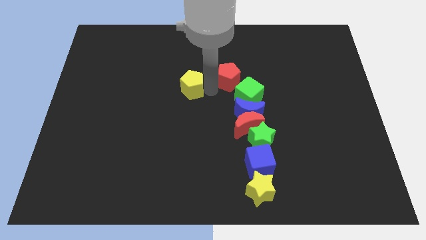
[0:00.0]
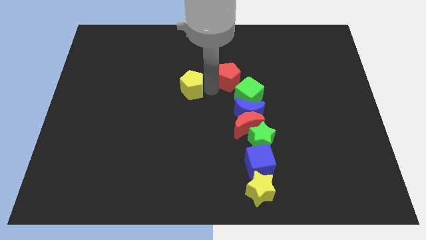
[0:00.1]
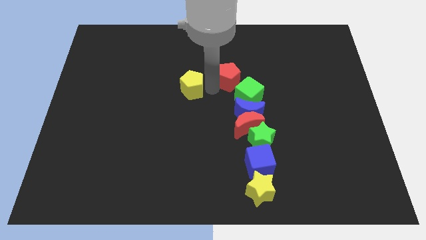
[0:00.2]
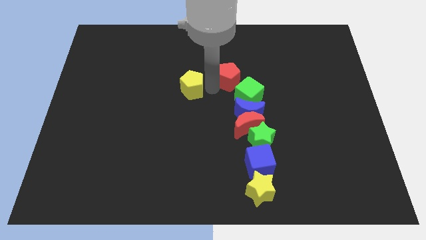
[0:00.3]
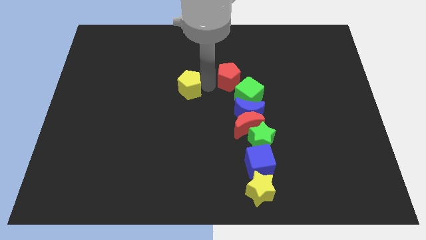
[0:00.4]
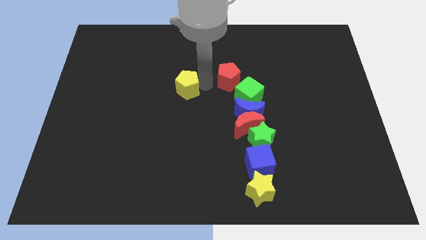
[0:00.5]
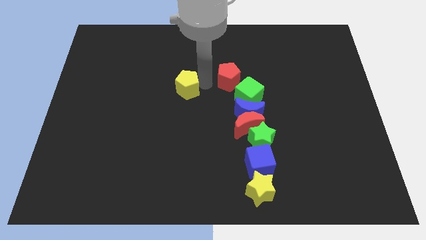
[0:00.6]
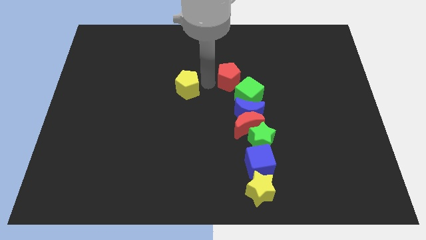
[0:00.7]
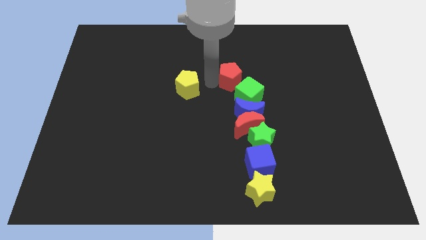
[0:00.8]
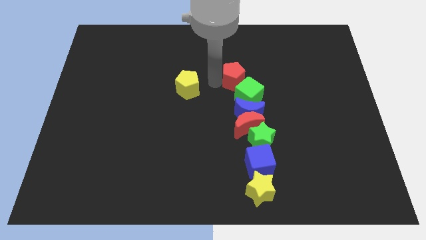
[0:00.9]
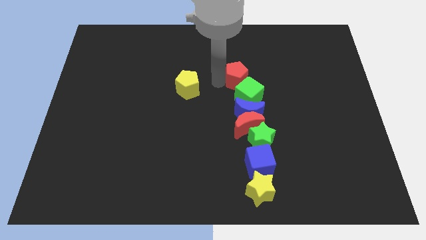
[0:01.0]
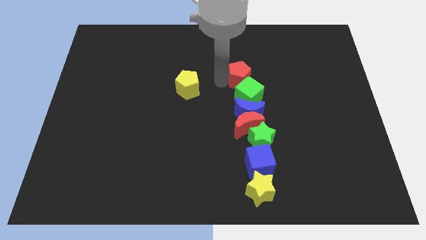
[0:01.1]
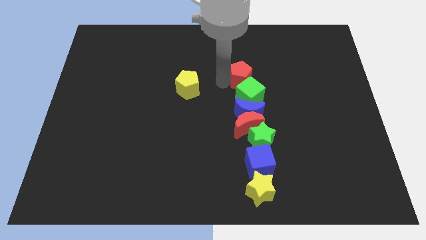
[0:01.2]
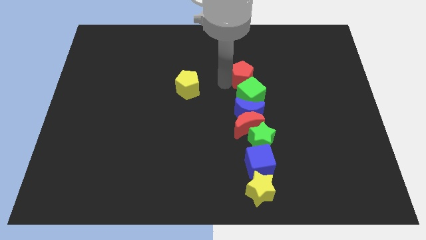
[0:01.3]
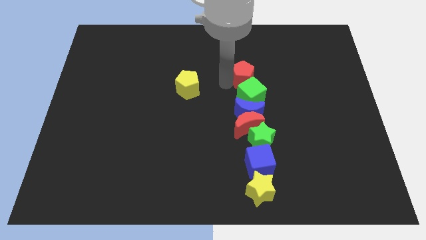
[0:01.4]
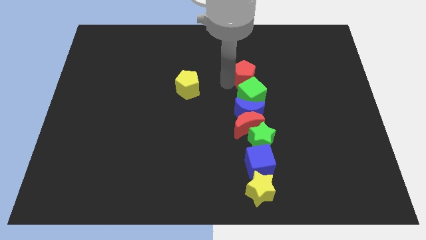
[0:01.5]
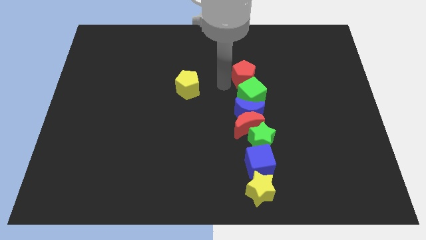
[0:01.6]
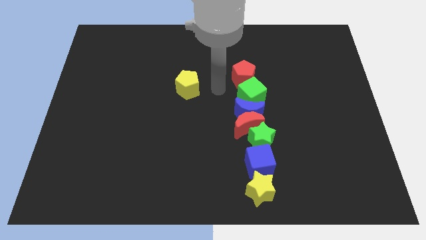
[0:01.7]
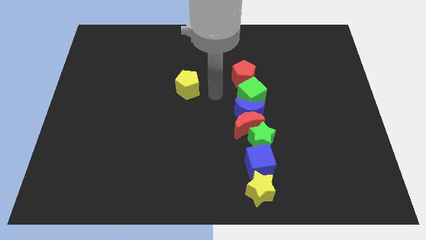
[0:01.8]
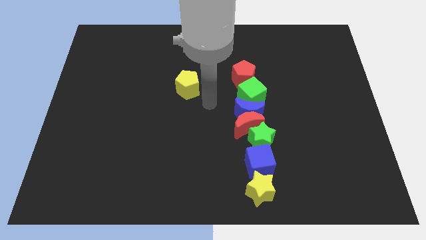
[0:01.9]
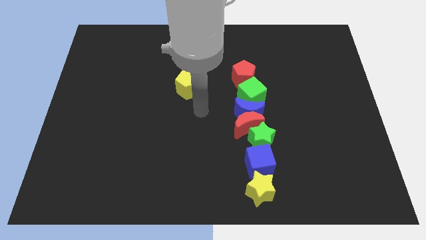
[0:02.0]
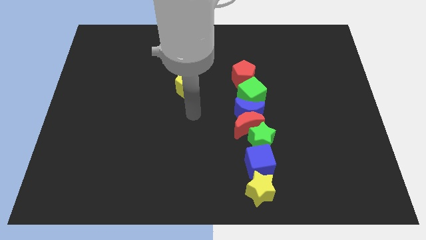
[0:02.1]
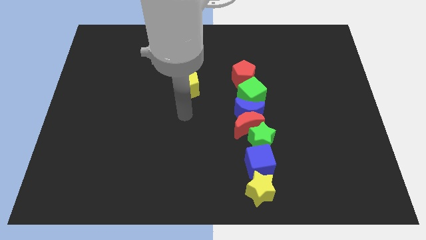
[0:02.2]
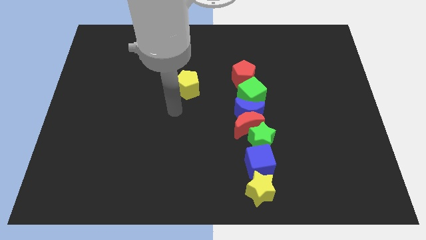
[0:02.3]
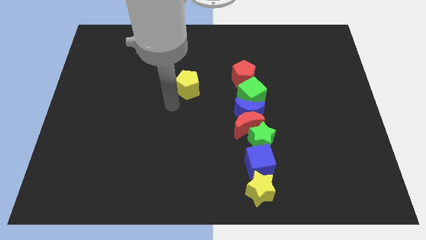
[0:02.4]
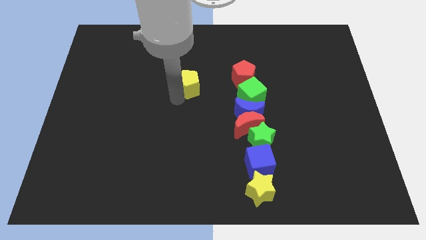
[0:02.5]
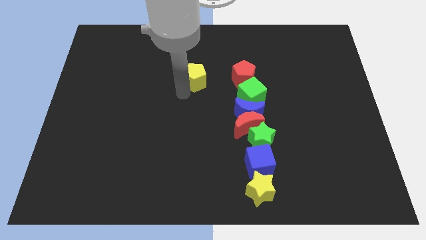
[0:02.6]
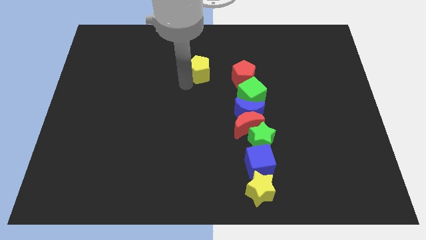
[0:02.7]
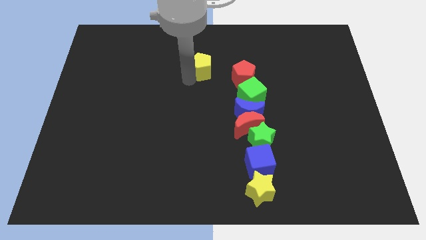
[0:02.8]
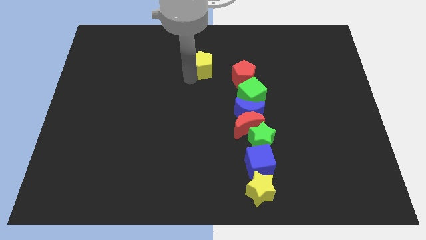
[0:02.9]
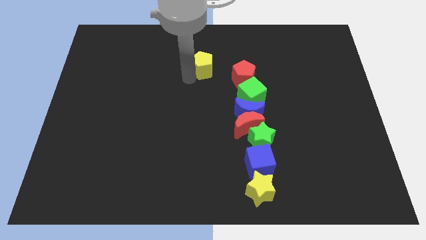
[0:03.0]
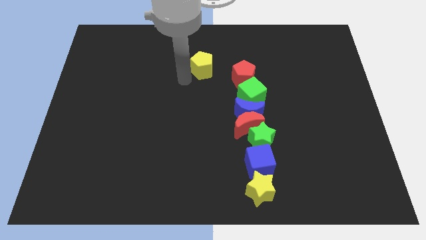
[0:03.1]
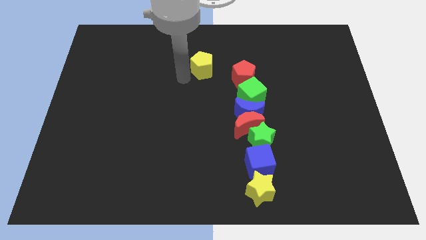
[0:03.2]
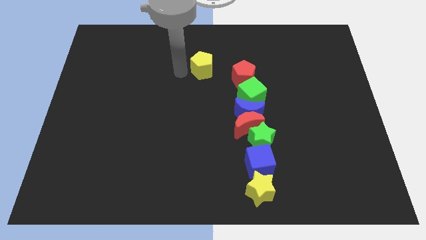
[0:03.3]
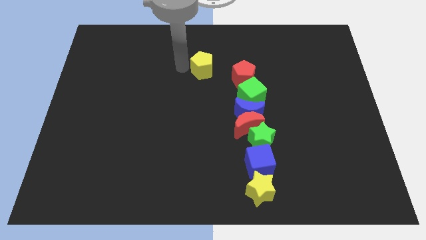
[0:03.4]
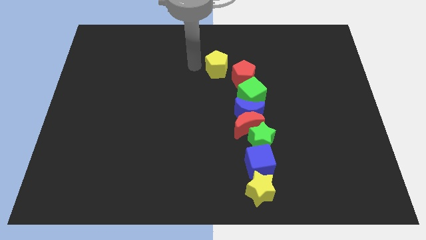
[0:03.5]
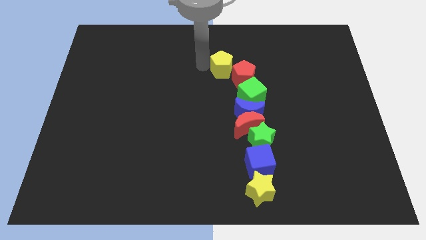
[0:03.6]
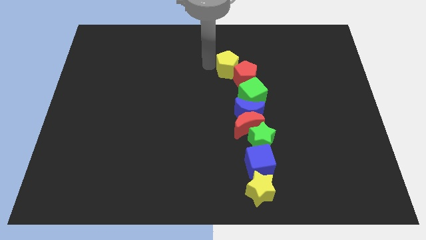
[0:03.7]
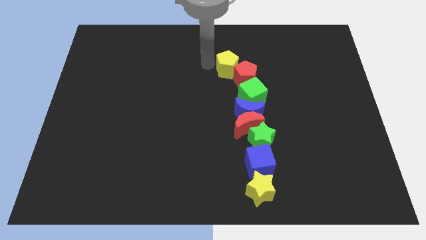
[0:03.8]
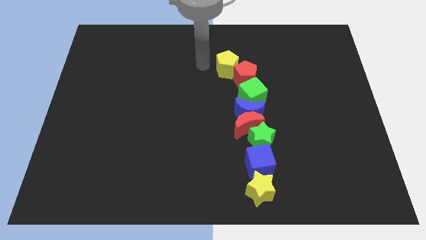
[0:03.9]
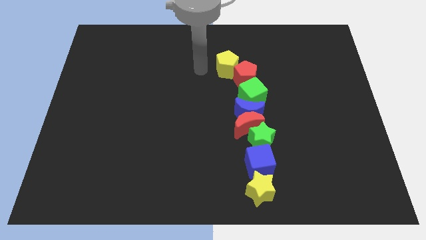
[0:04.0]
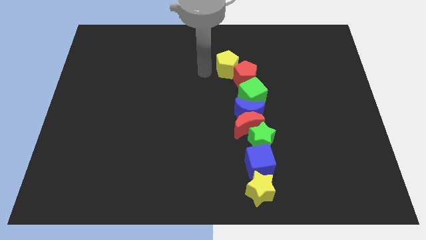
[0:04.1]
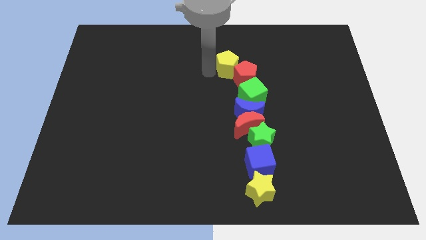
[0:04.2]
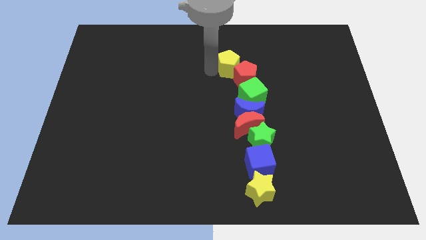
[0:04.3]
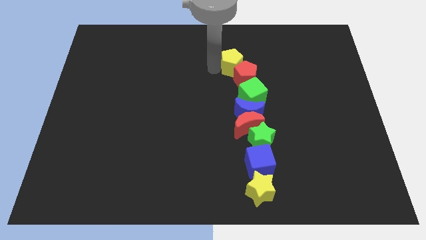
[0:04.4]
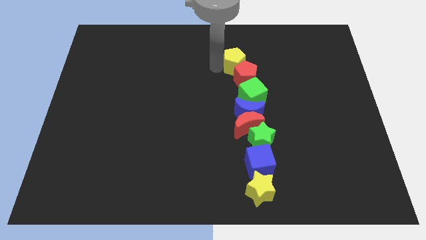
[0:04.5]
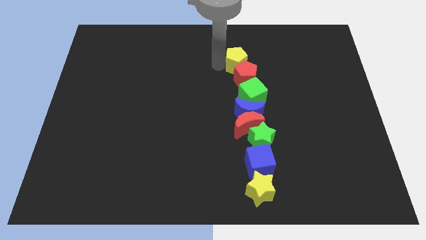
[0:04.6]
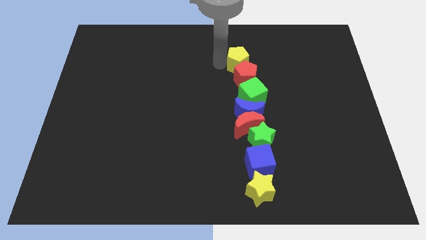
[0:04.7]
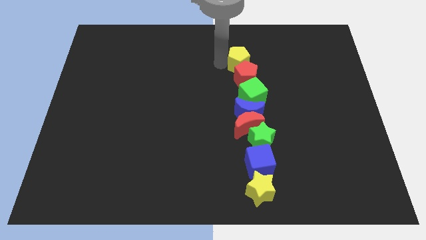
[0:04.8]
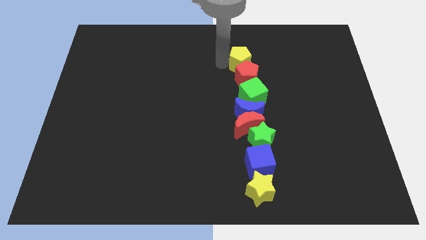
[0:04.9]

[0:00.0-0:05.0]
move the yellow pentagon above the red pentagon

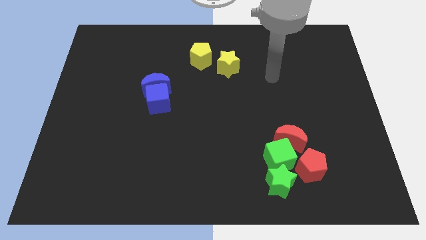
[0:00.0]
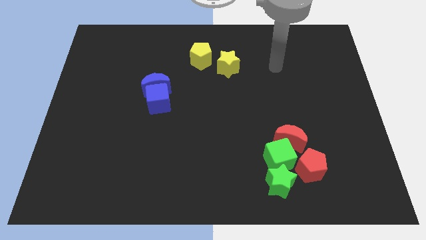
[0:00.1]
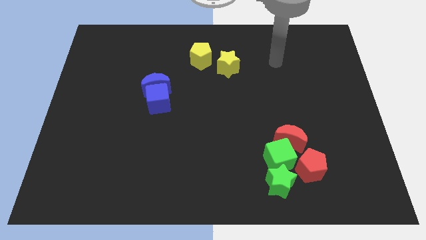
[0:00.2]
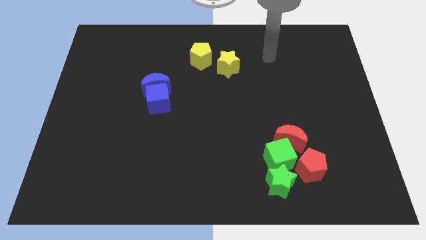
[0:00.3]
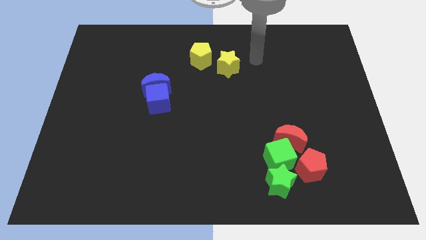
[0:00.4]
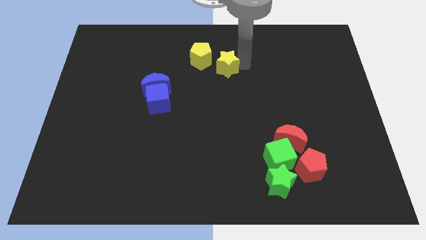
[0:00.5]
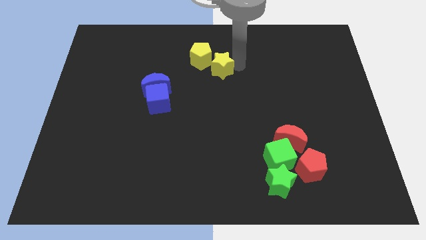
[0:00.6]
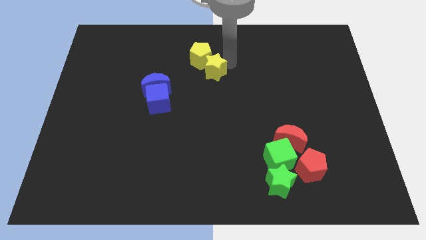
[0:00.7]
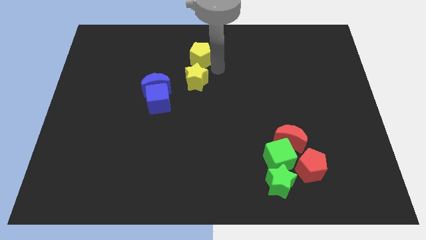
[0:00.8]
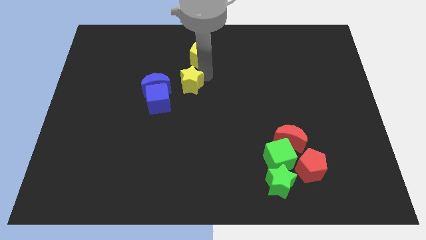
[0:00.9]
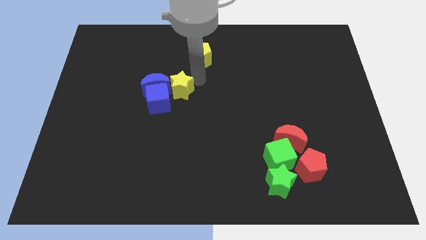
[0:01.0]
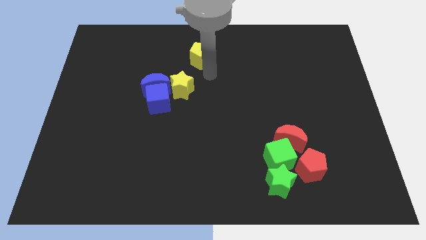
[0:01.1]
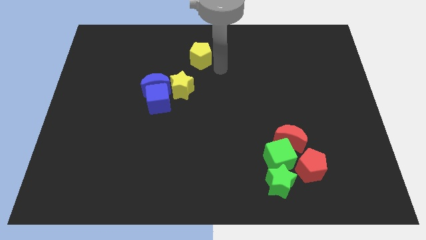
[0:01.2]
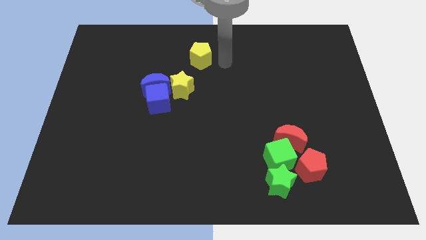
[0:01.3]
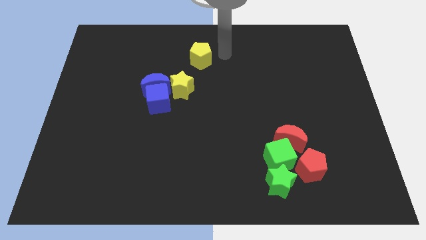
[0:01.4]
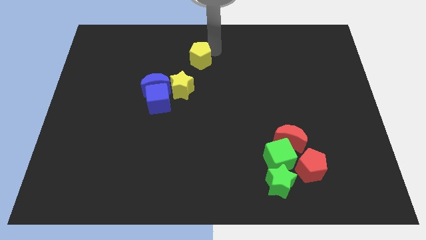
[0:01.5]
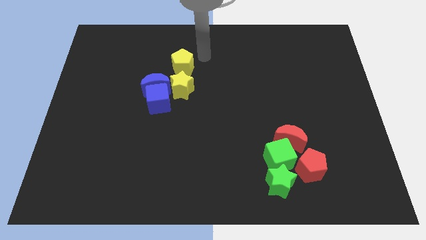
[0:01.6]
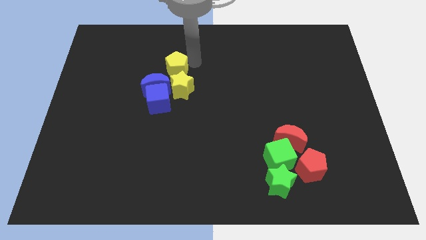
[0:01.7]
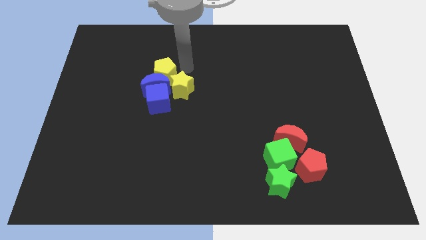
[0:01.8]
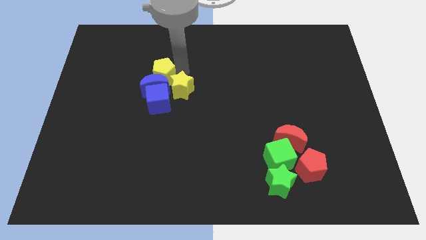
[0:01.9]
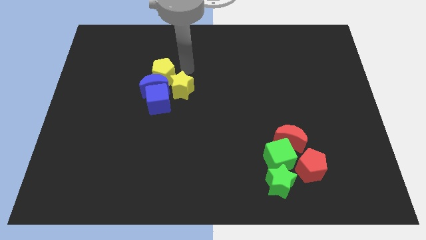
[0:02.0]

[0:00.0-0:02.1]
make a group out of blue and yellow blocks

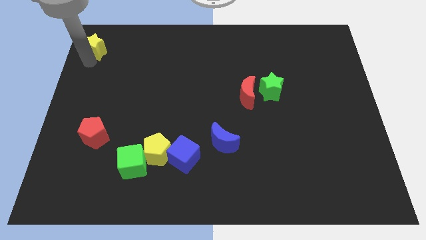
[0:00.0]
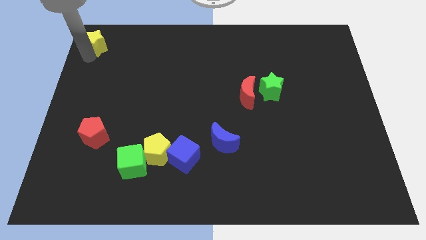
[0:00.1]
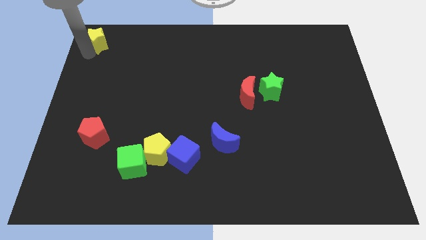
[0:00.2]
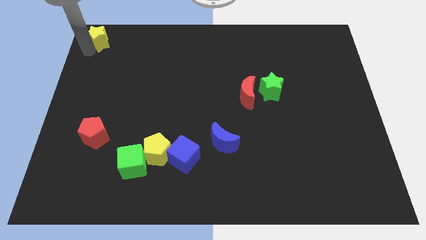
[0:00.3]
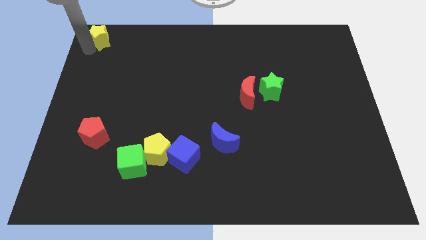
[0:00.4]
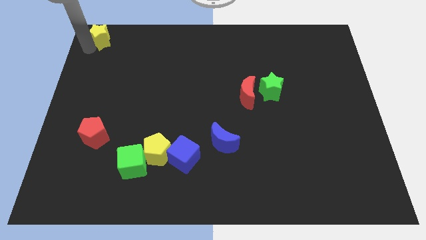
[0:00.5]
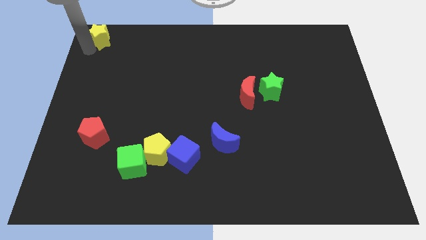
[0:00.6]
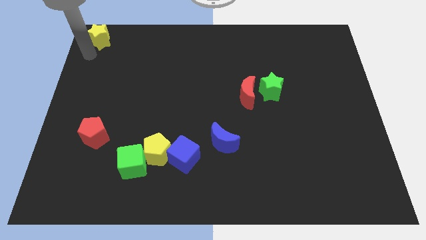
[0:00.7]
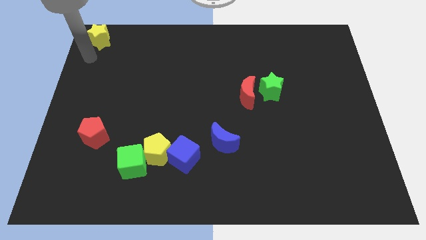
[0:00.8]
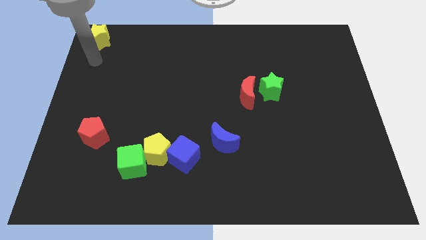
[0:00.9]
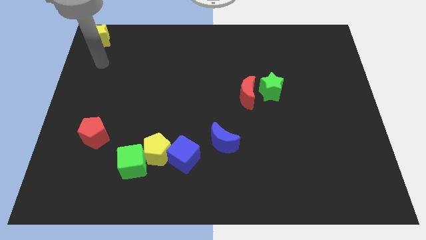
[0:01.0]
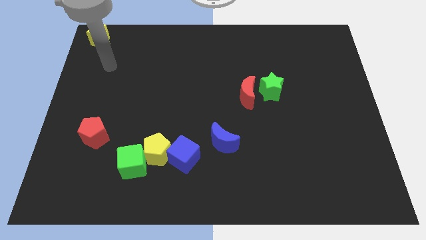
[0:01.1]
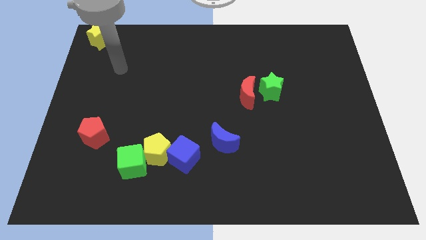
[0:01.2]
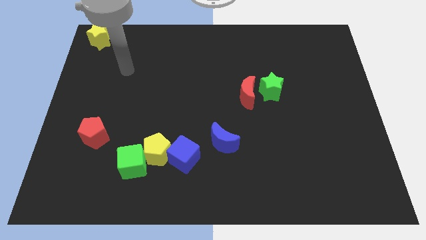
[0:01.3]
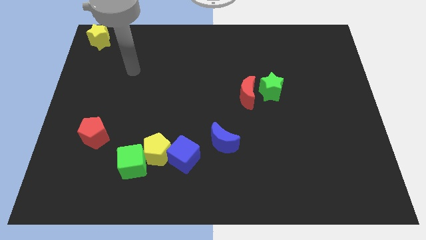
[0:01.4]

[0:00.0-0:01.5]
move the yellow star to the top left corner of the board

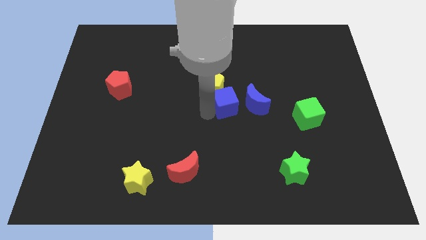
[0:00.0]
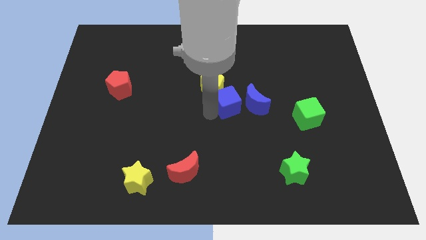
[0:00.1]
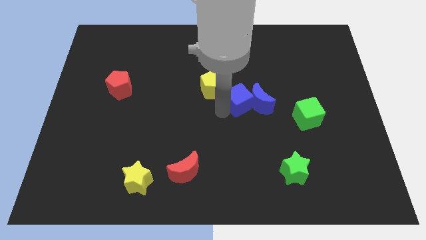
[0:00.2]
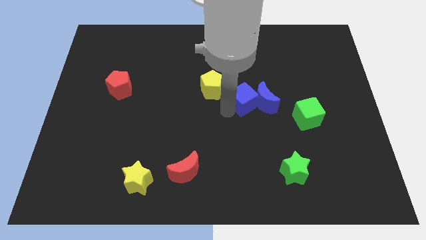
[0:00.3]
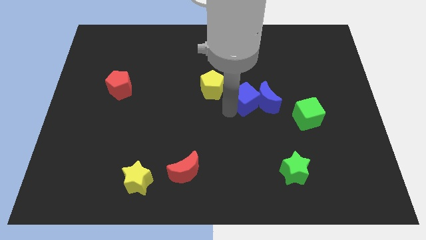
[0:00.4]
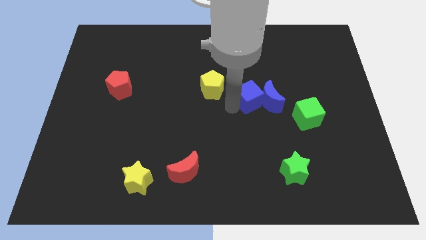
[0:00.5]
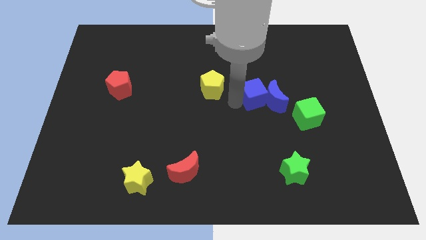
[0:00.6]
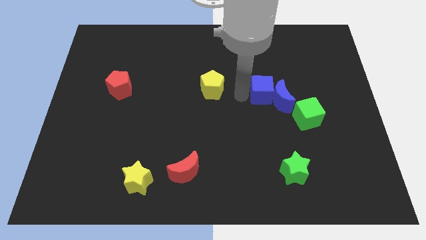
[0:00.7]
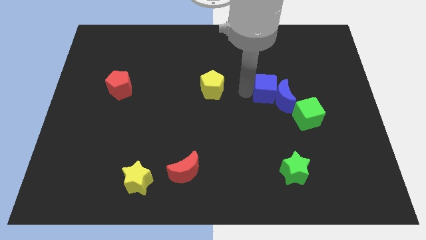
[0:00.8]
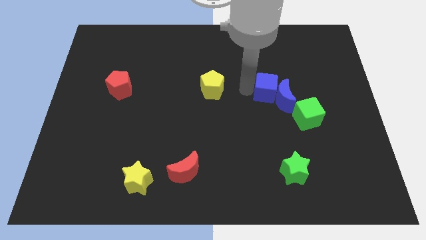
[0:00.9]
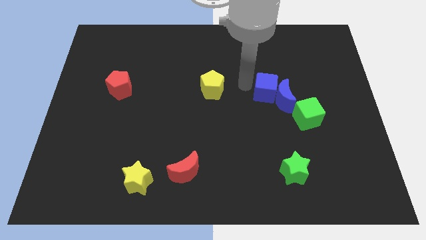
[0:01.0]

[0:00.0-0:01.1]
push blue moon and blue cube together towards right
